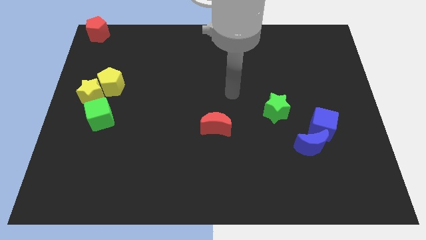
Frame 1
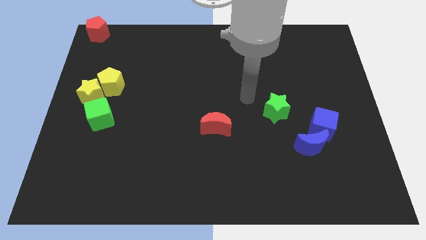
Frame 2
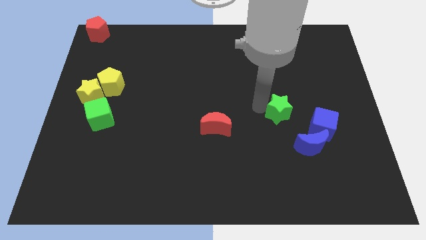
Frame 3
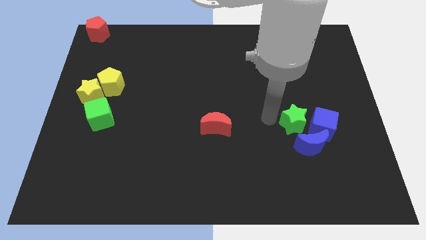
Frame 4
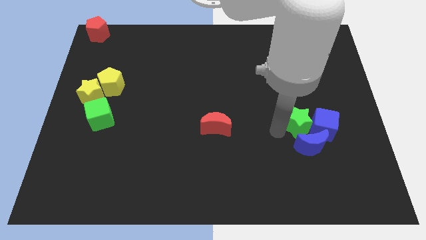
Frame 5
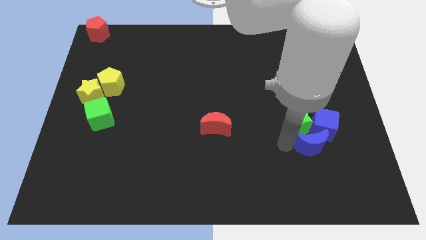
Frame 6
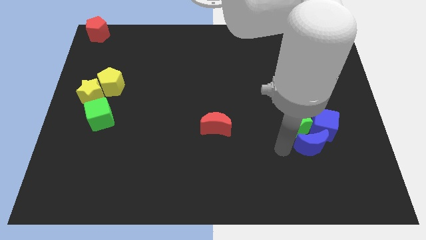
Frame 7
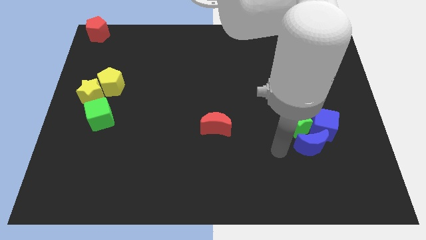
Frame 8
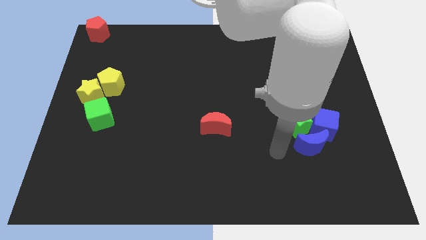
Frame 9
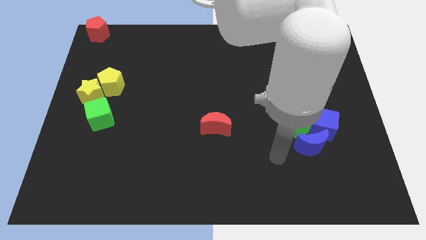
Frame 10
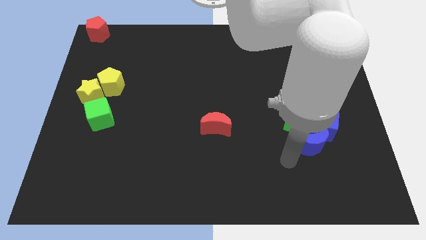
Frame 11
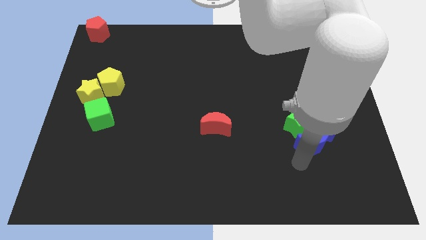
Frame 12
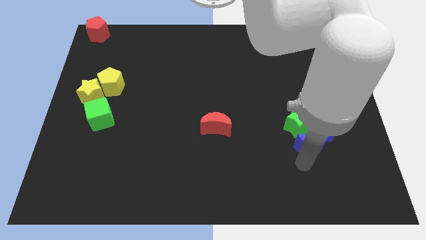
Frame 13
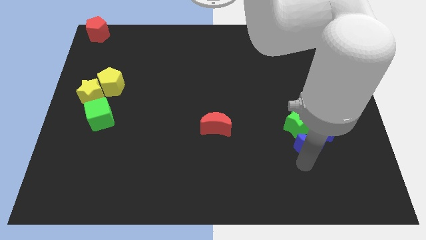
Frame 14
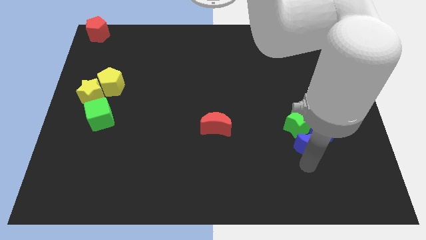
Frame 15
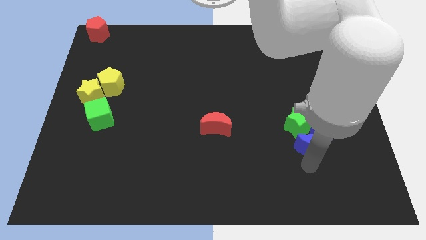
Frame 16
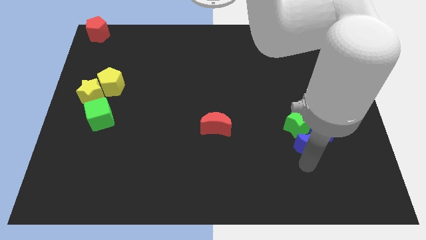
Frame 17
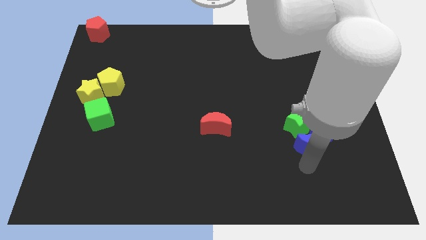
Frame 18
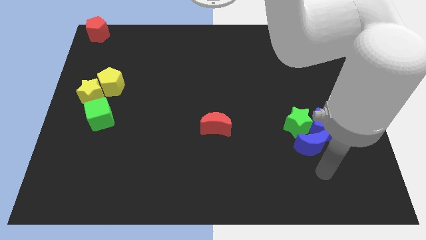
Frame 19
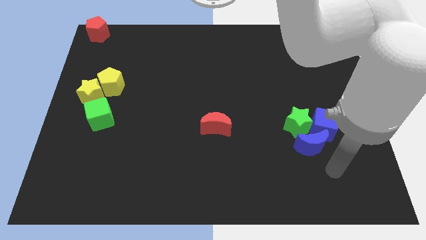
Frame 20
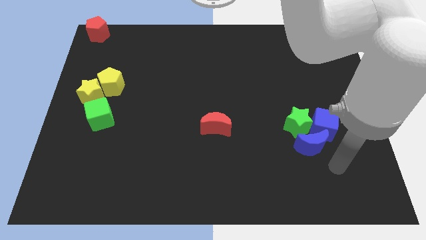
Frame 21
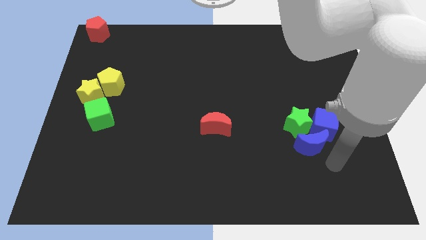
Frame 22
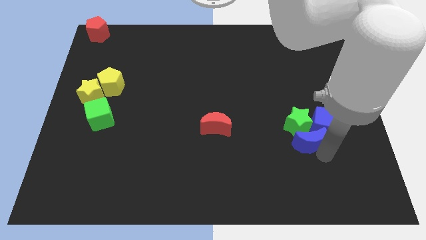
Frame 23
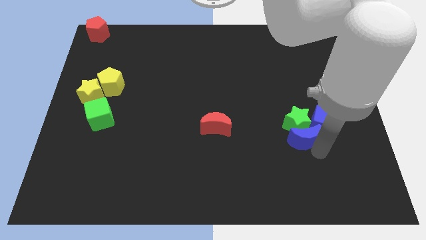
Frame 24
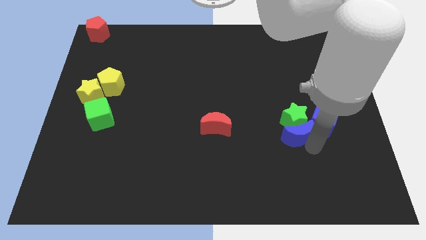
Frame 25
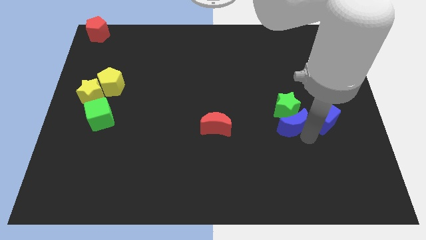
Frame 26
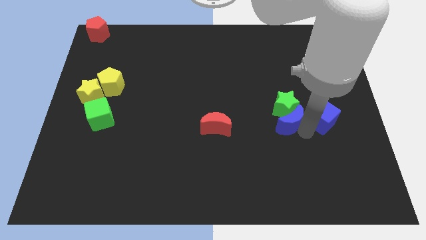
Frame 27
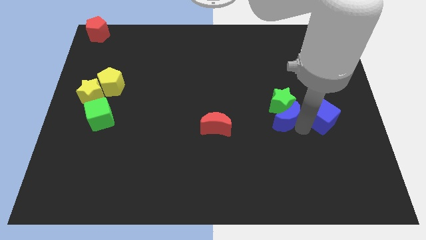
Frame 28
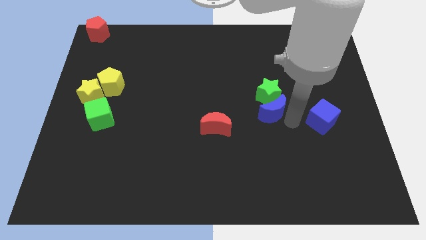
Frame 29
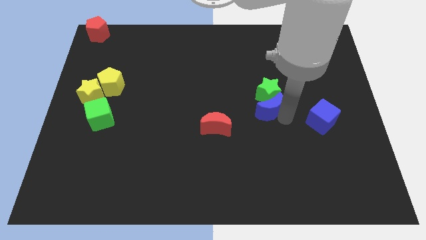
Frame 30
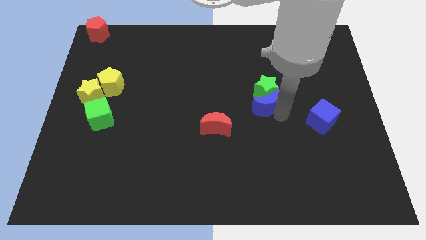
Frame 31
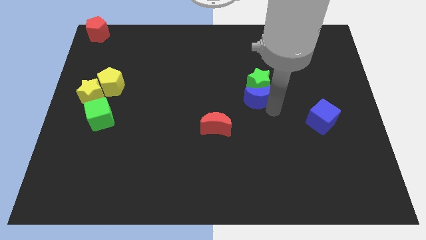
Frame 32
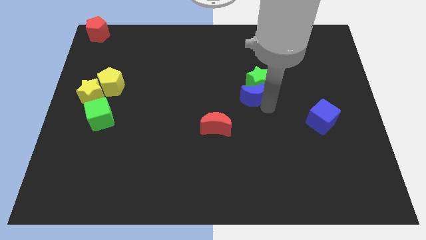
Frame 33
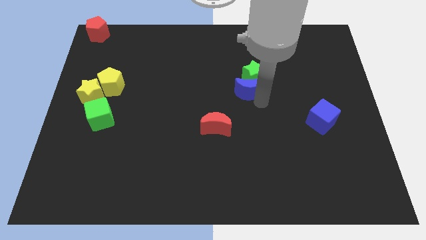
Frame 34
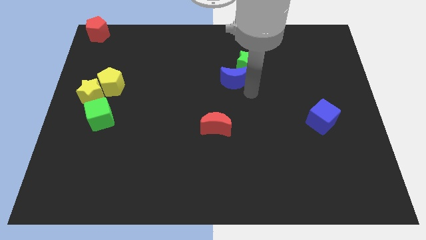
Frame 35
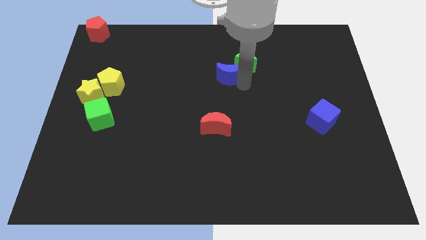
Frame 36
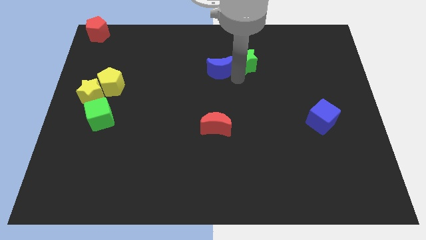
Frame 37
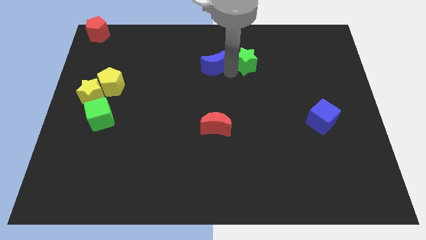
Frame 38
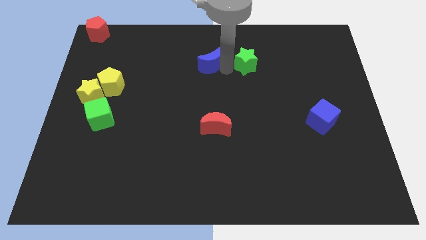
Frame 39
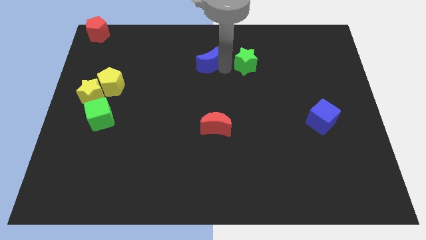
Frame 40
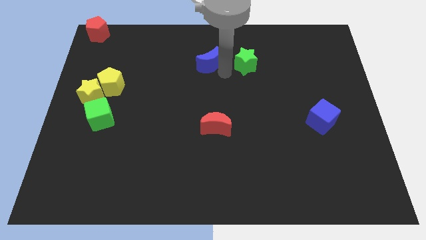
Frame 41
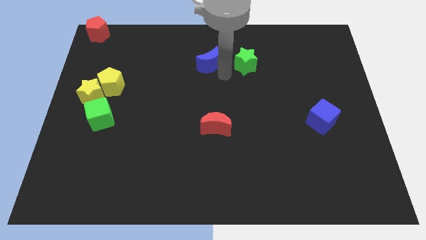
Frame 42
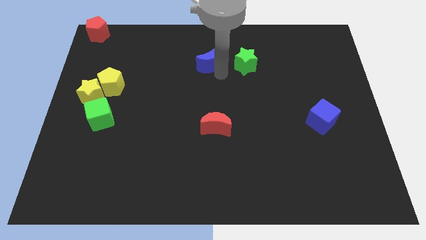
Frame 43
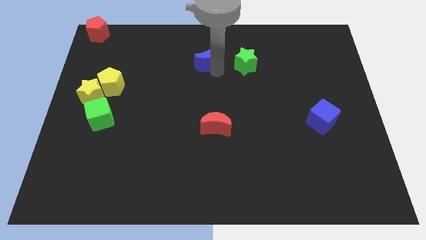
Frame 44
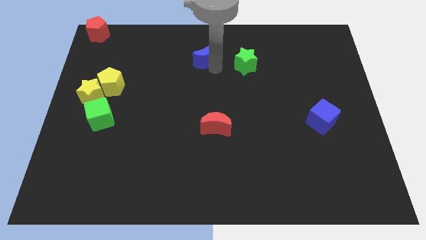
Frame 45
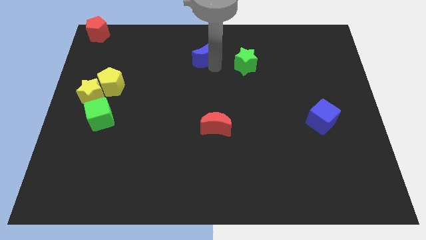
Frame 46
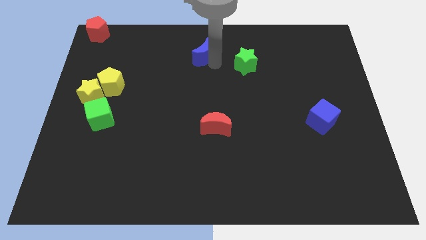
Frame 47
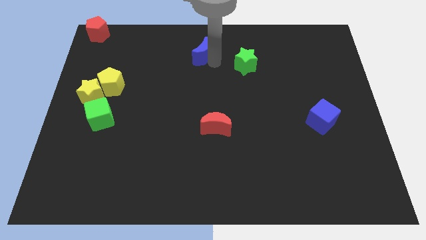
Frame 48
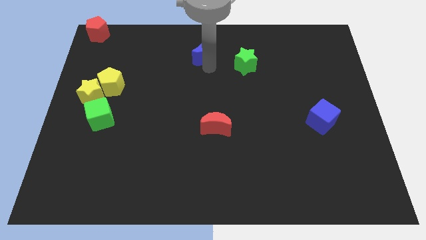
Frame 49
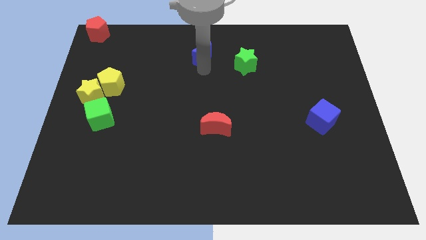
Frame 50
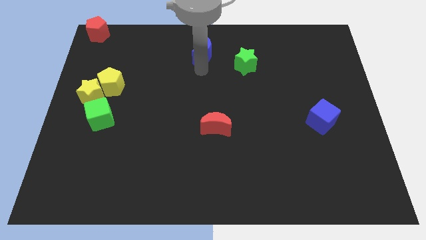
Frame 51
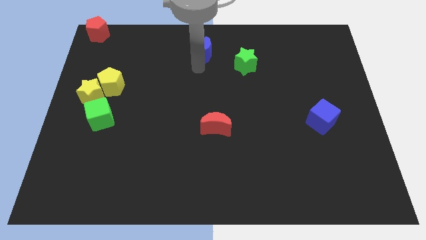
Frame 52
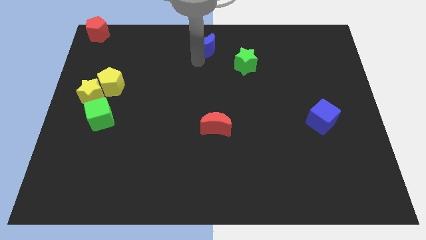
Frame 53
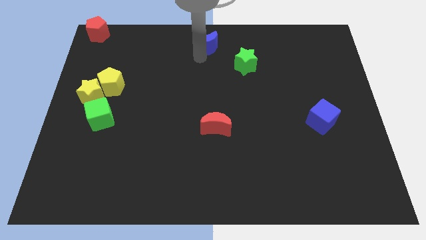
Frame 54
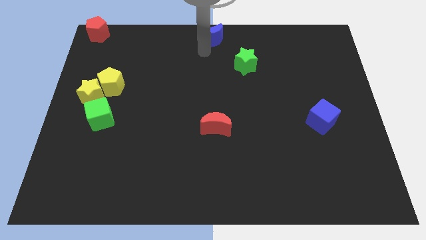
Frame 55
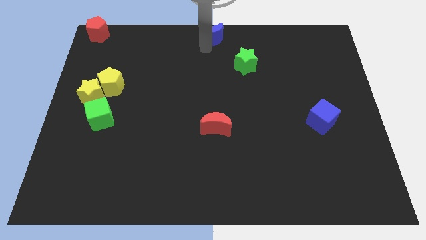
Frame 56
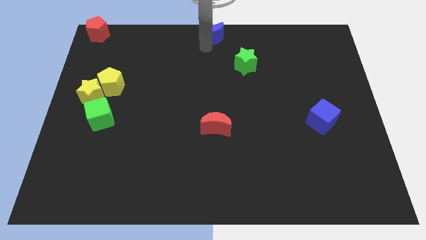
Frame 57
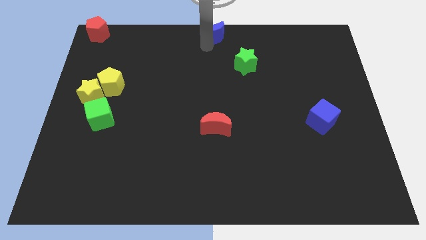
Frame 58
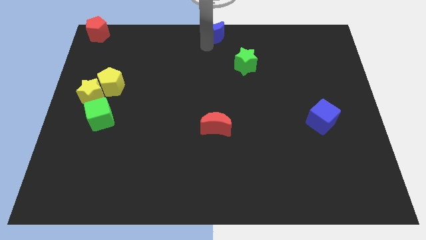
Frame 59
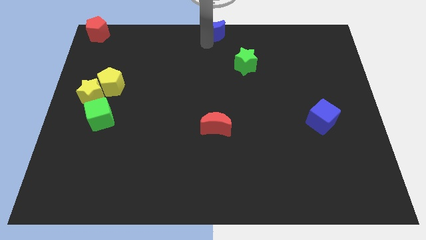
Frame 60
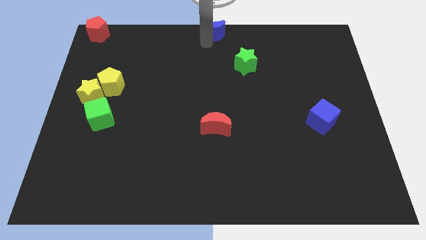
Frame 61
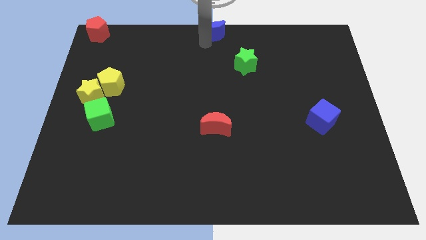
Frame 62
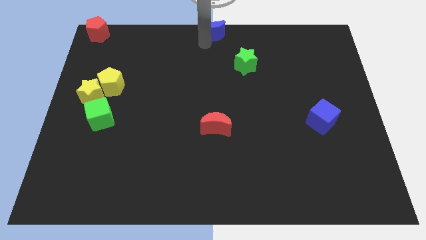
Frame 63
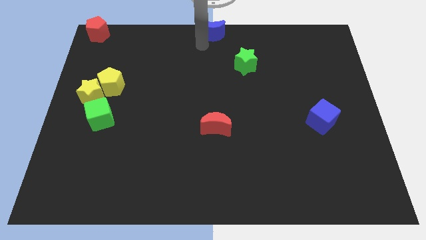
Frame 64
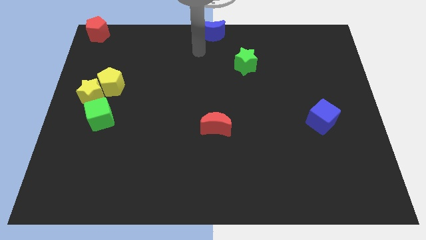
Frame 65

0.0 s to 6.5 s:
place the blue crescent to the right of the red pentagon
